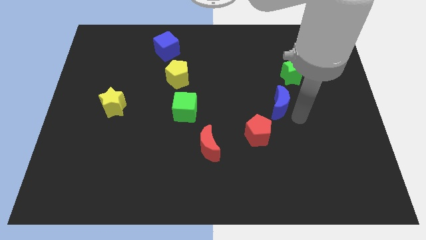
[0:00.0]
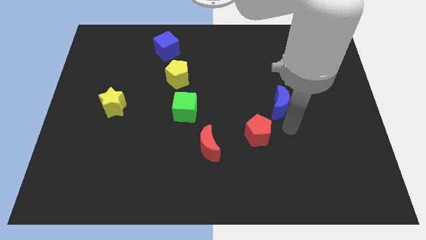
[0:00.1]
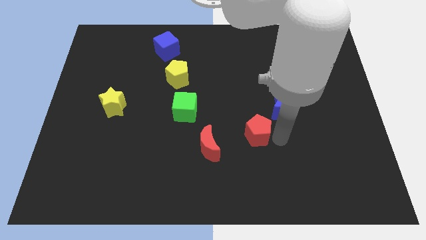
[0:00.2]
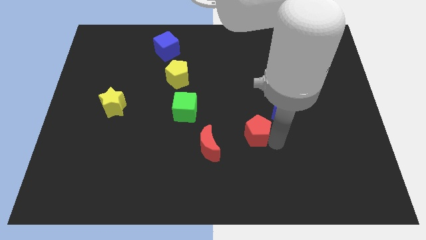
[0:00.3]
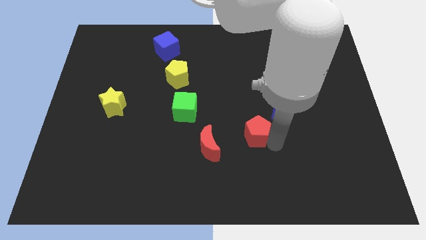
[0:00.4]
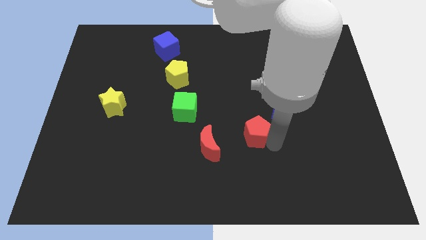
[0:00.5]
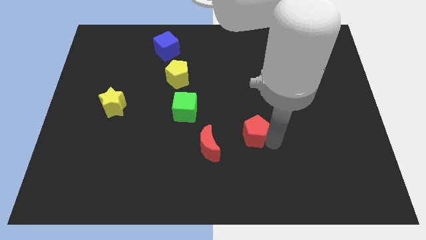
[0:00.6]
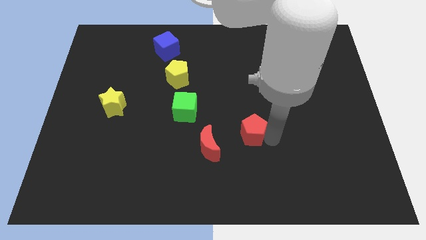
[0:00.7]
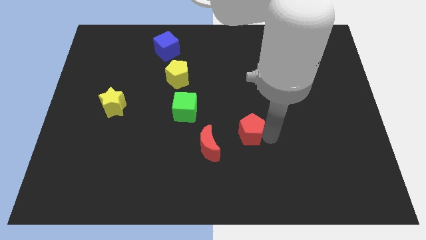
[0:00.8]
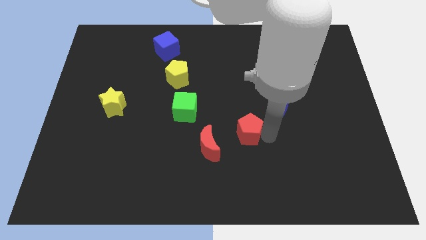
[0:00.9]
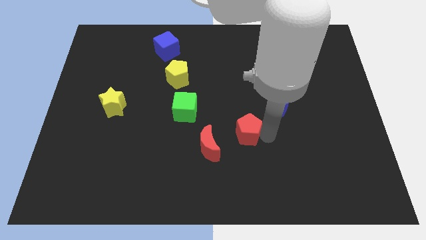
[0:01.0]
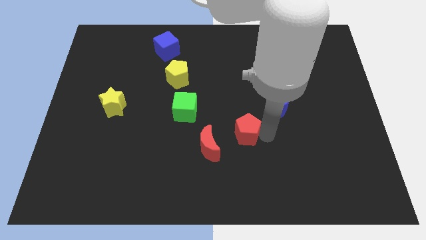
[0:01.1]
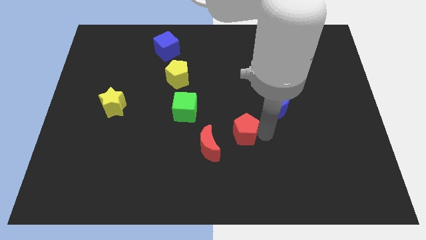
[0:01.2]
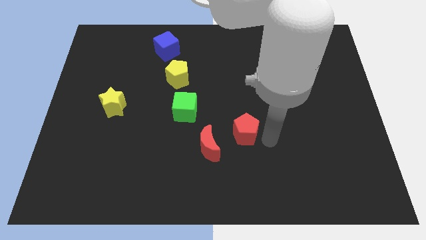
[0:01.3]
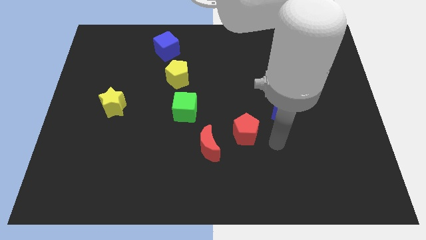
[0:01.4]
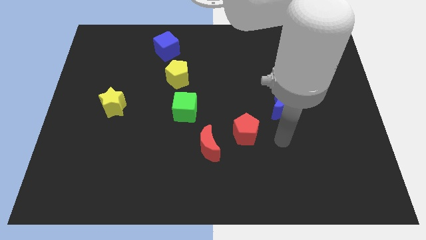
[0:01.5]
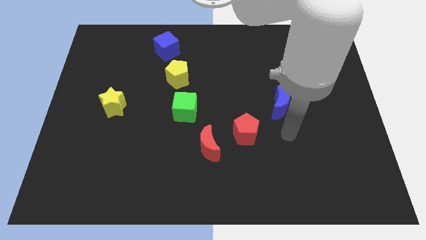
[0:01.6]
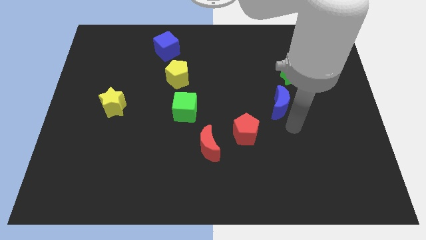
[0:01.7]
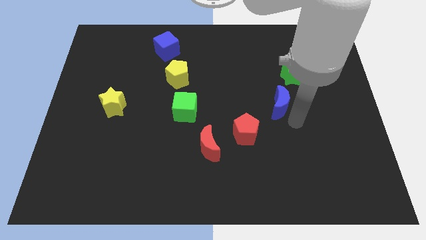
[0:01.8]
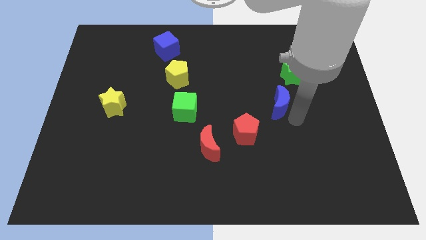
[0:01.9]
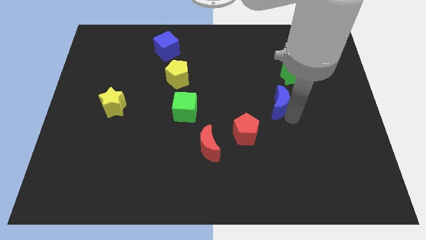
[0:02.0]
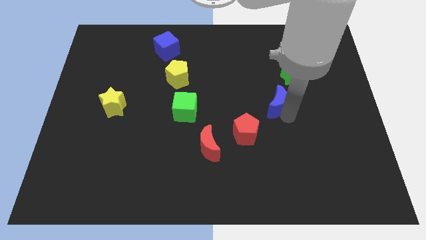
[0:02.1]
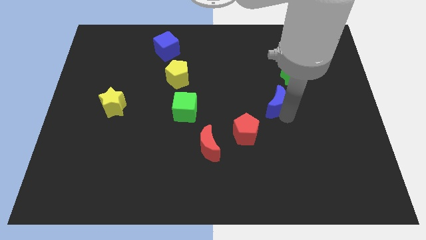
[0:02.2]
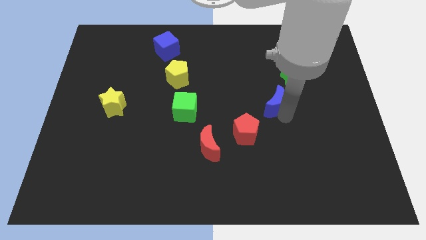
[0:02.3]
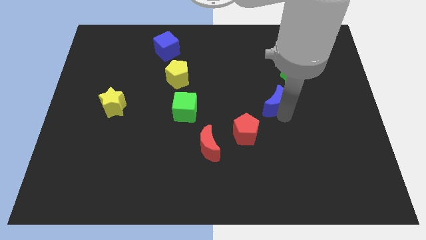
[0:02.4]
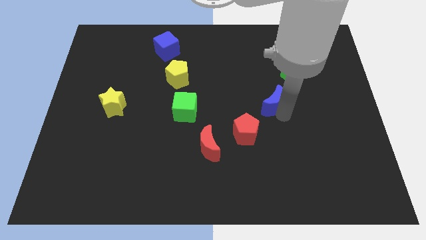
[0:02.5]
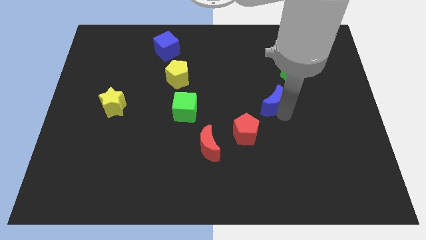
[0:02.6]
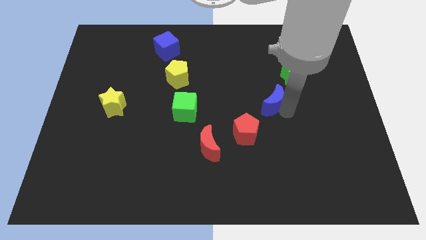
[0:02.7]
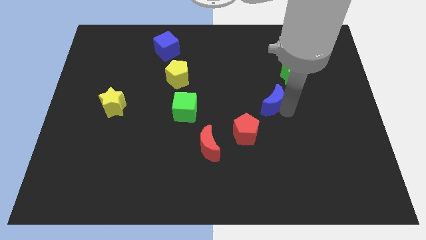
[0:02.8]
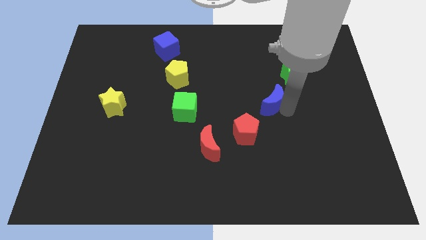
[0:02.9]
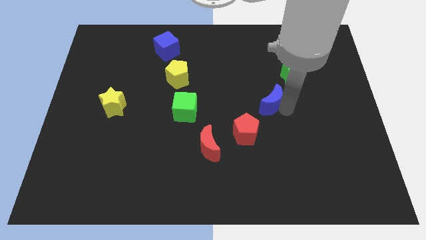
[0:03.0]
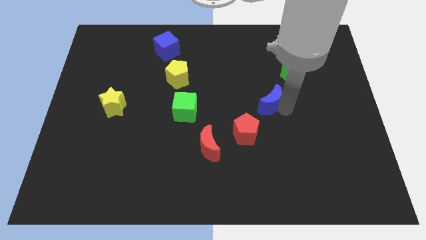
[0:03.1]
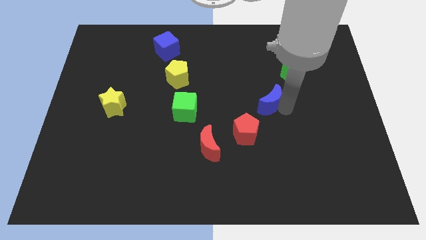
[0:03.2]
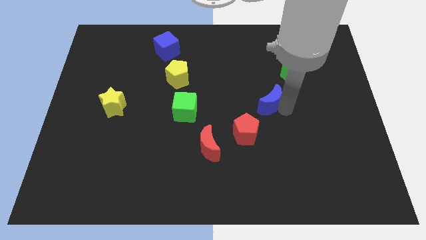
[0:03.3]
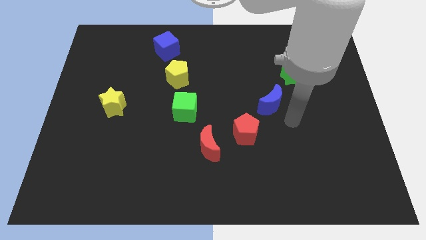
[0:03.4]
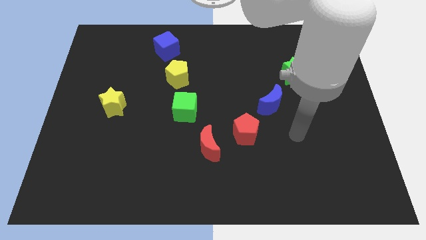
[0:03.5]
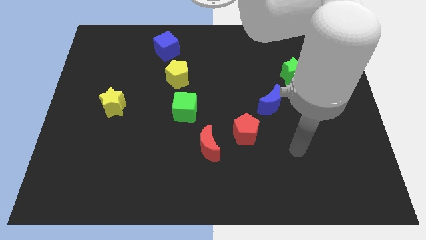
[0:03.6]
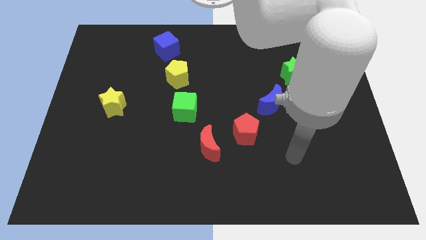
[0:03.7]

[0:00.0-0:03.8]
adjust red pentagon and blue crescent to form a line

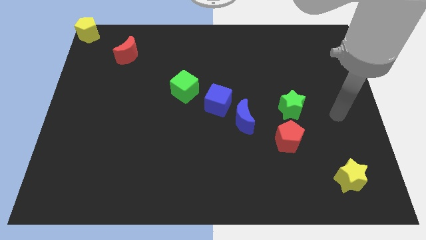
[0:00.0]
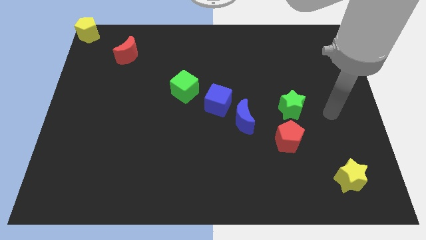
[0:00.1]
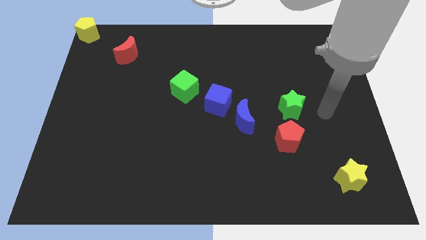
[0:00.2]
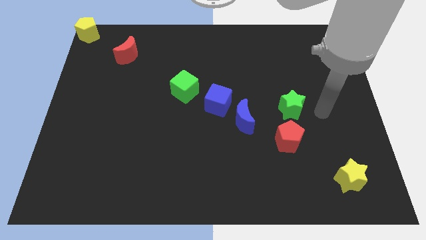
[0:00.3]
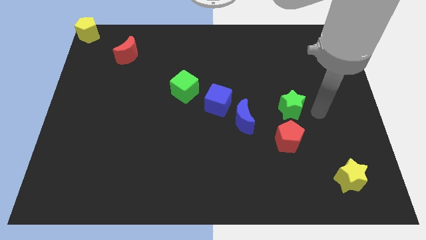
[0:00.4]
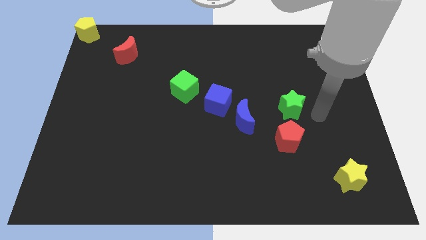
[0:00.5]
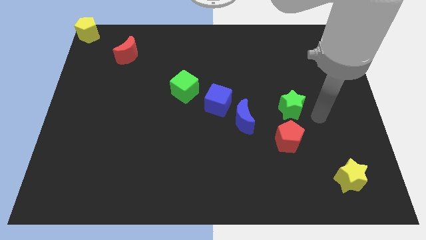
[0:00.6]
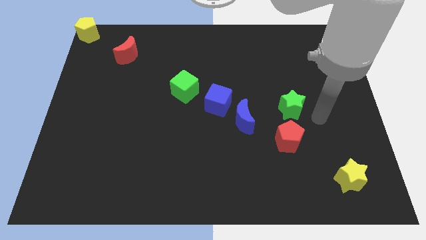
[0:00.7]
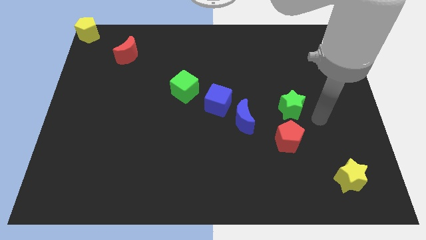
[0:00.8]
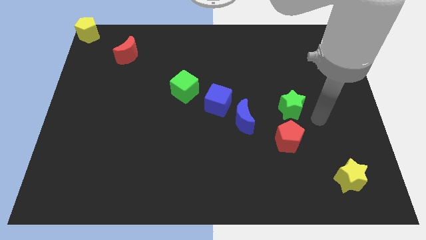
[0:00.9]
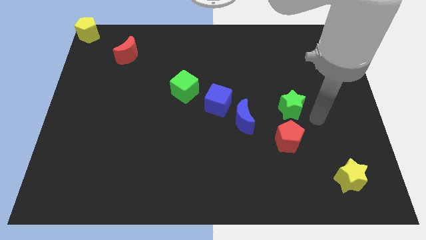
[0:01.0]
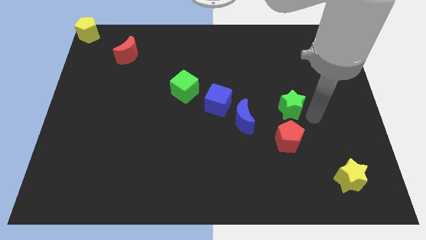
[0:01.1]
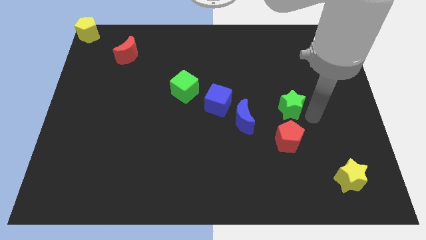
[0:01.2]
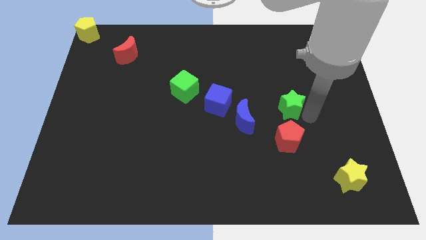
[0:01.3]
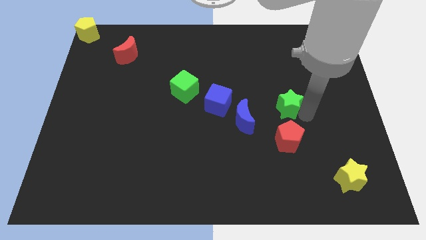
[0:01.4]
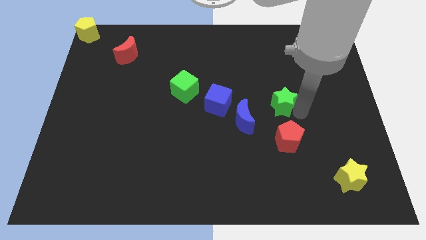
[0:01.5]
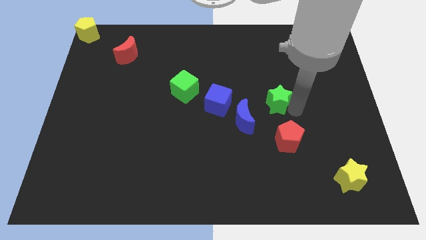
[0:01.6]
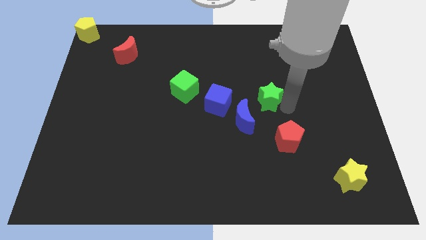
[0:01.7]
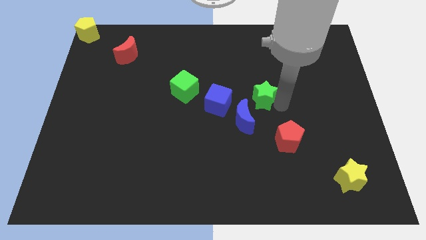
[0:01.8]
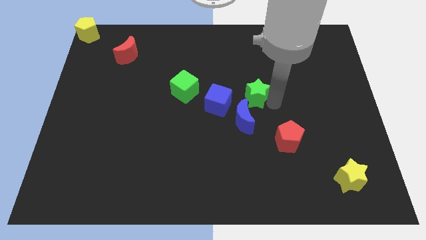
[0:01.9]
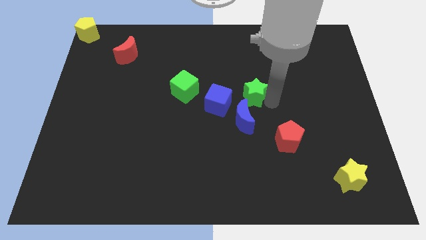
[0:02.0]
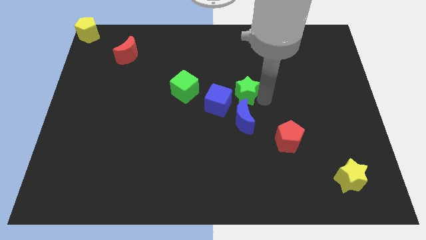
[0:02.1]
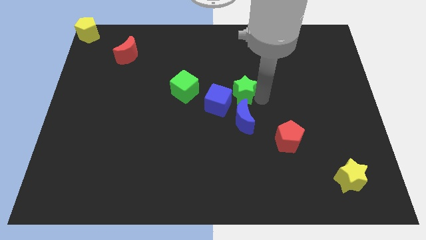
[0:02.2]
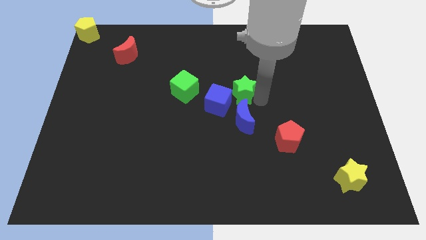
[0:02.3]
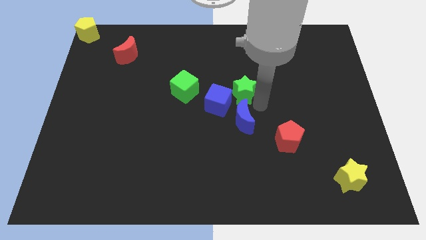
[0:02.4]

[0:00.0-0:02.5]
put the green star at the top of the blue moon

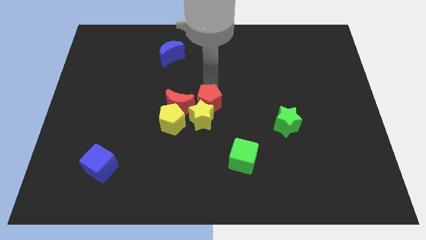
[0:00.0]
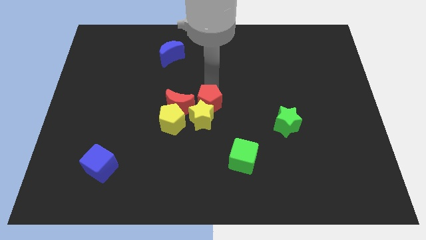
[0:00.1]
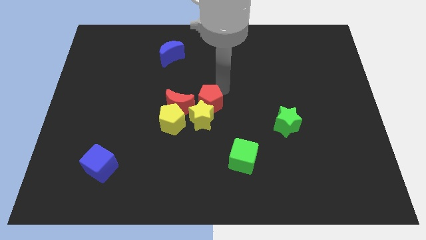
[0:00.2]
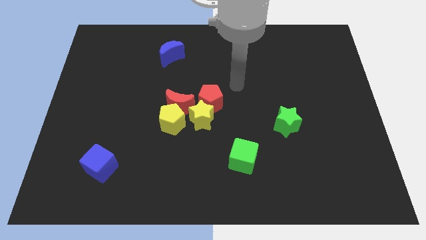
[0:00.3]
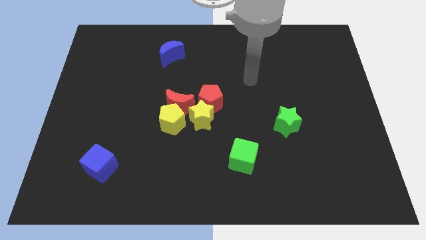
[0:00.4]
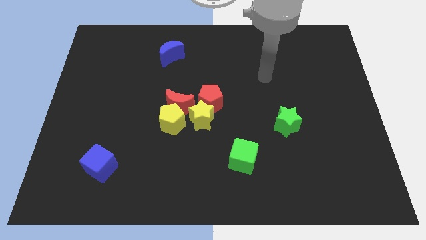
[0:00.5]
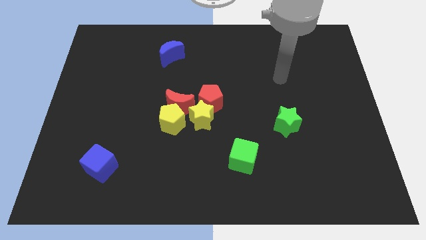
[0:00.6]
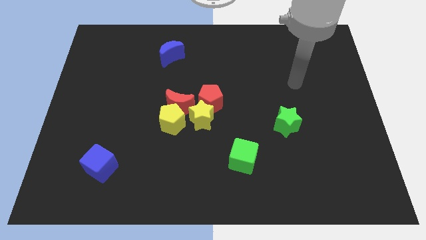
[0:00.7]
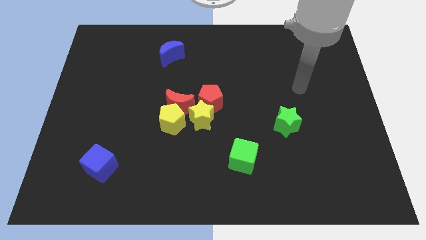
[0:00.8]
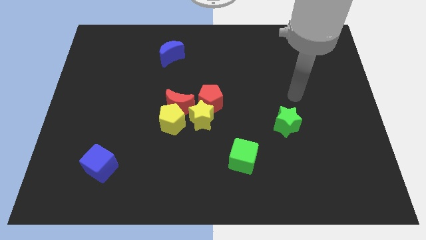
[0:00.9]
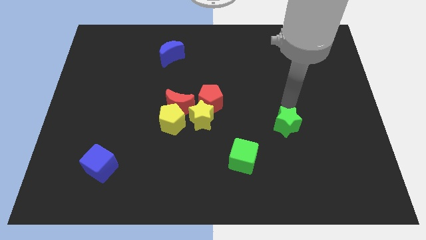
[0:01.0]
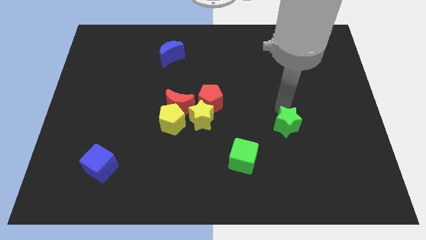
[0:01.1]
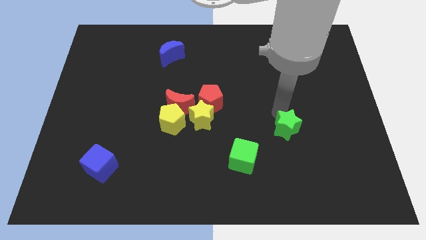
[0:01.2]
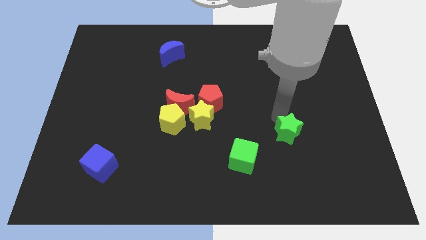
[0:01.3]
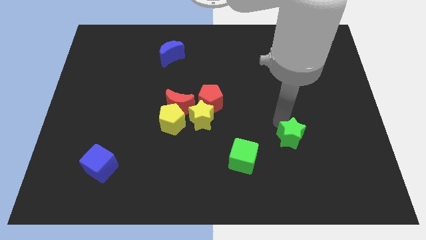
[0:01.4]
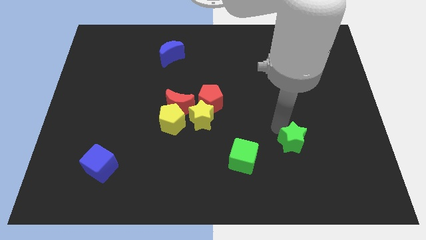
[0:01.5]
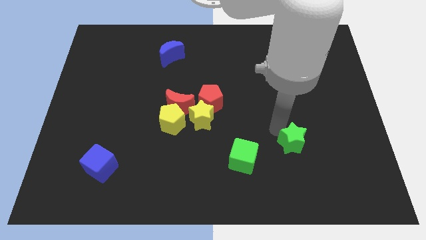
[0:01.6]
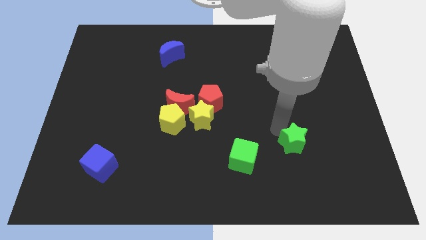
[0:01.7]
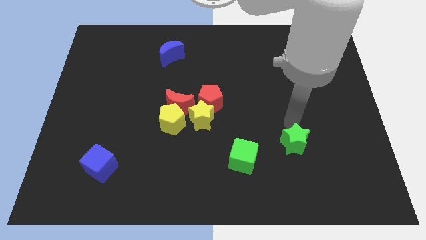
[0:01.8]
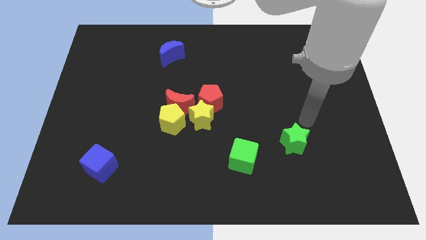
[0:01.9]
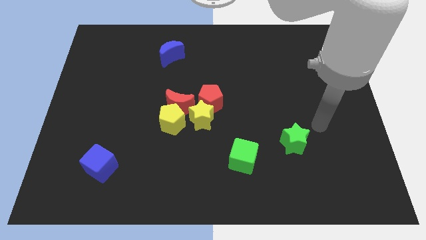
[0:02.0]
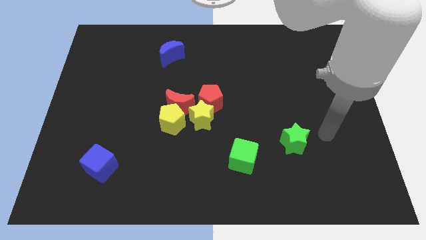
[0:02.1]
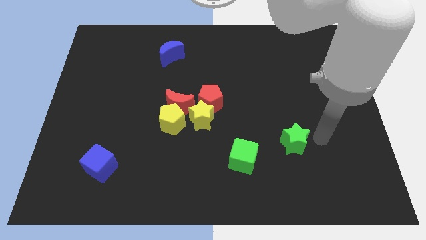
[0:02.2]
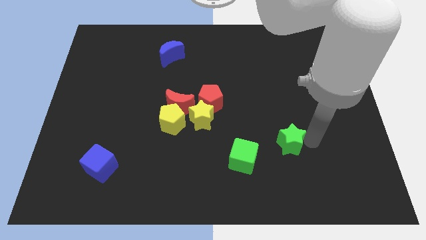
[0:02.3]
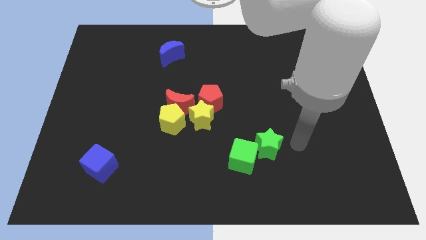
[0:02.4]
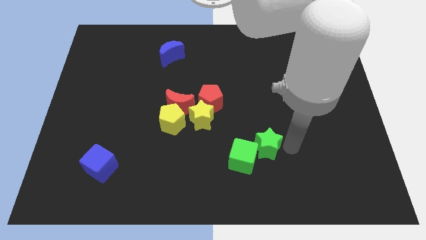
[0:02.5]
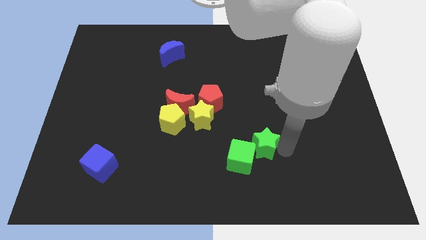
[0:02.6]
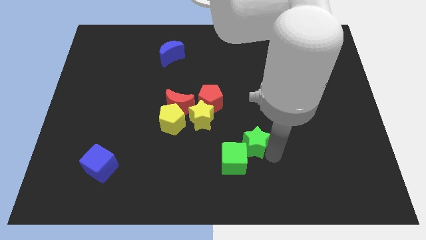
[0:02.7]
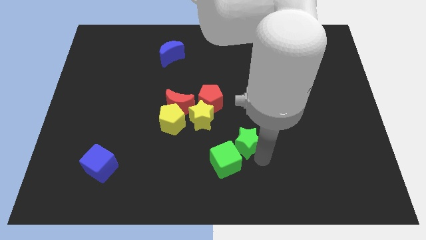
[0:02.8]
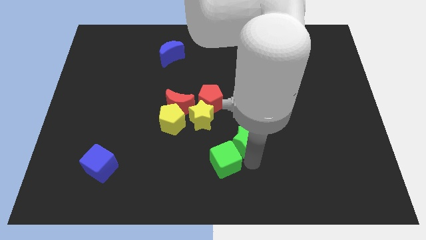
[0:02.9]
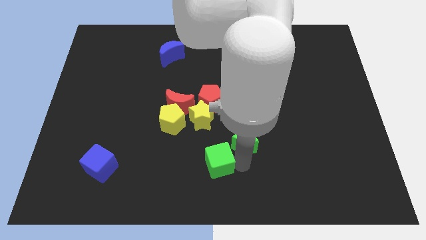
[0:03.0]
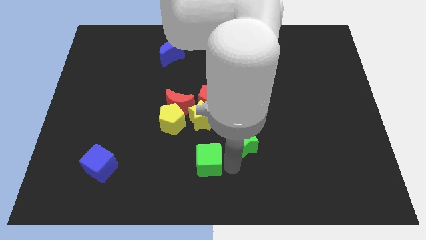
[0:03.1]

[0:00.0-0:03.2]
move the green star close to the green cube
